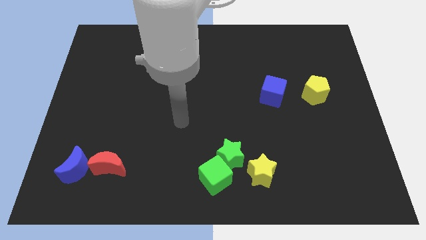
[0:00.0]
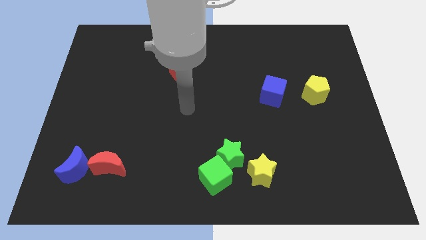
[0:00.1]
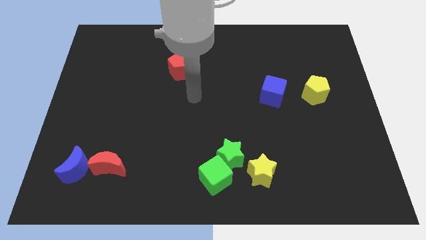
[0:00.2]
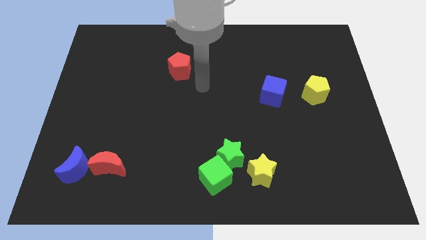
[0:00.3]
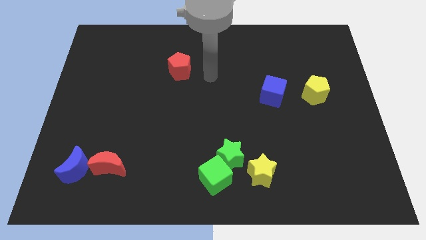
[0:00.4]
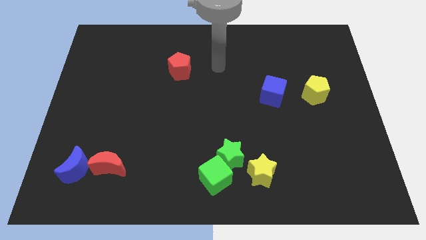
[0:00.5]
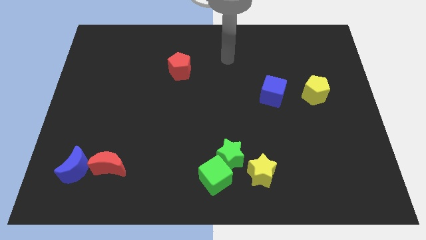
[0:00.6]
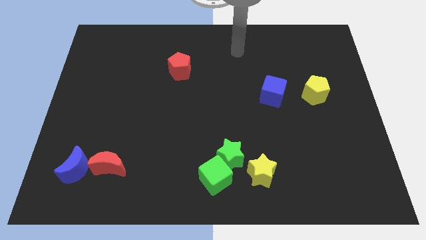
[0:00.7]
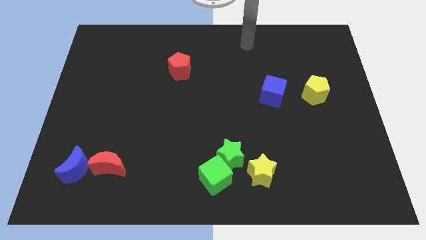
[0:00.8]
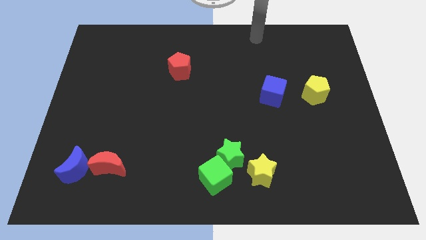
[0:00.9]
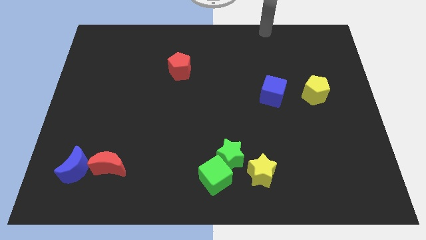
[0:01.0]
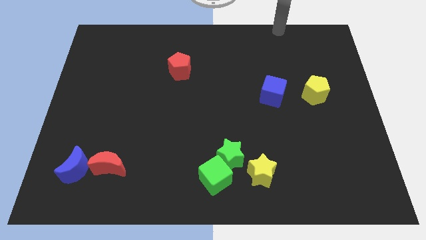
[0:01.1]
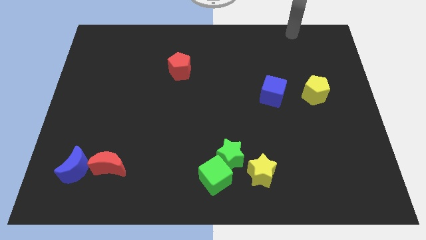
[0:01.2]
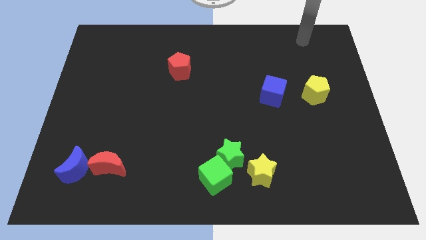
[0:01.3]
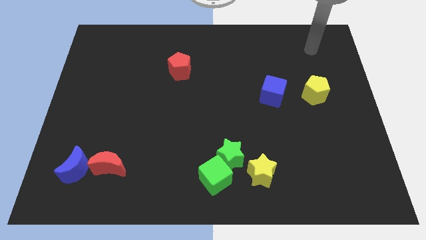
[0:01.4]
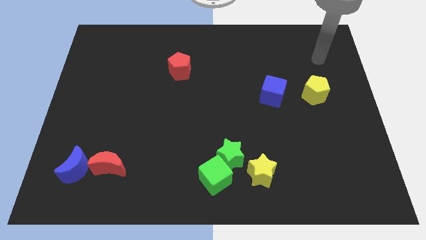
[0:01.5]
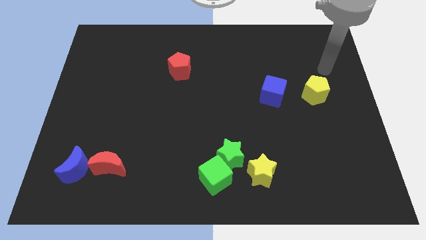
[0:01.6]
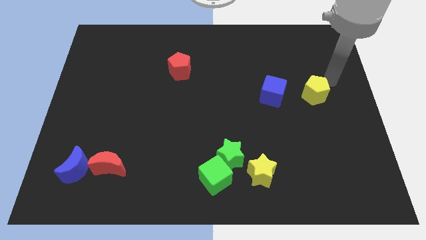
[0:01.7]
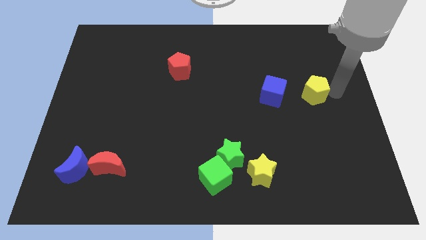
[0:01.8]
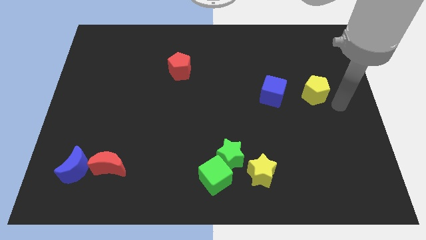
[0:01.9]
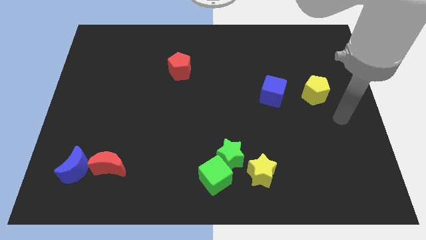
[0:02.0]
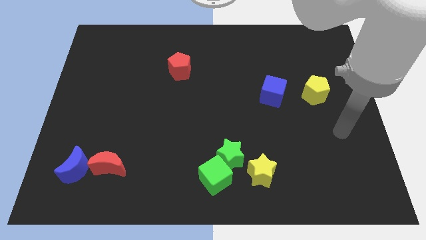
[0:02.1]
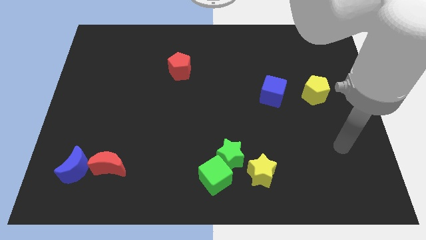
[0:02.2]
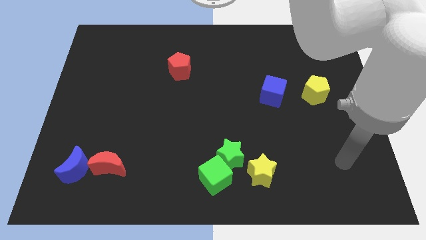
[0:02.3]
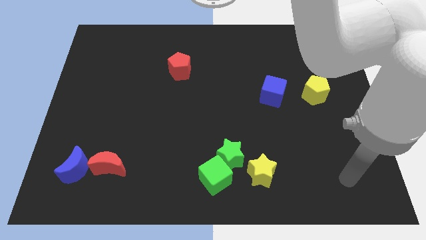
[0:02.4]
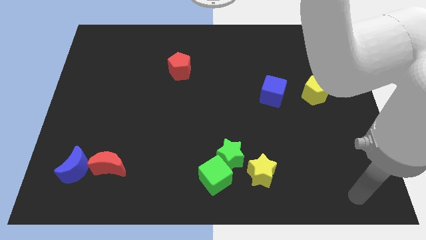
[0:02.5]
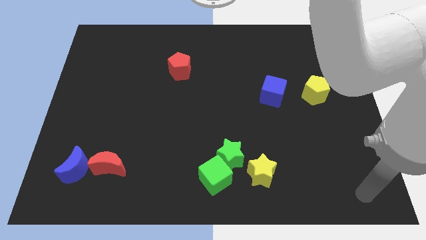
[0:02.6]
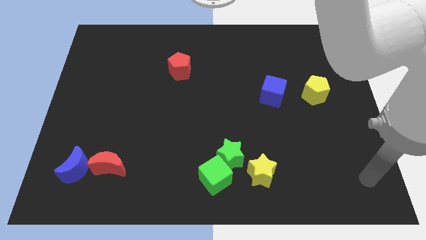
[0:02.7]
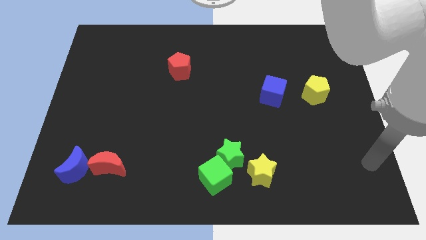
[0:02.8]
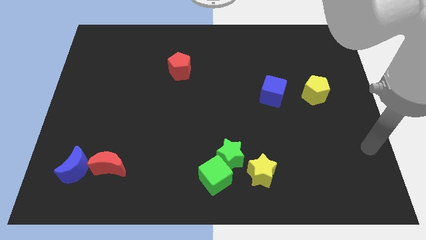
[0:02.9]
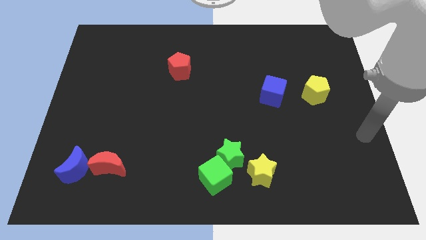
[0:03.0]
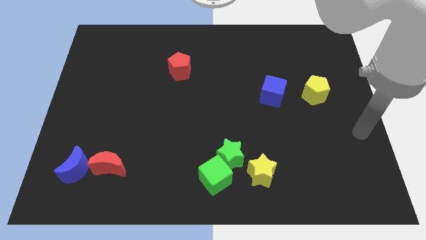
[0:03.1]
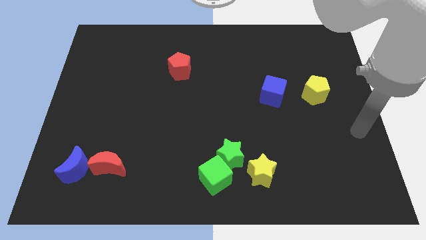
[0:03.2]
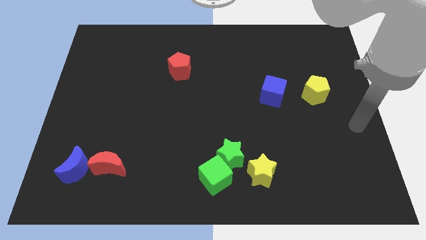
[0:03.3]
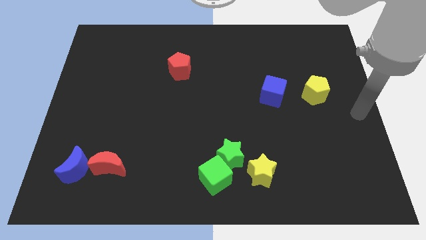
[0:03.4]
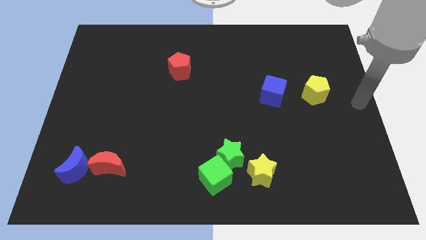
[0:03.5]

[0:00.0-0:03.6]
point your arm to the center right side of the board

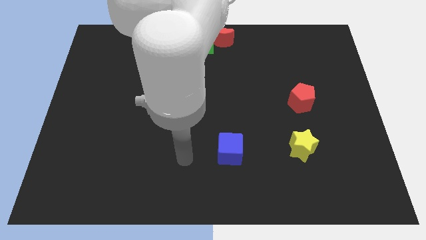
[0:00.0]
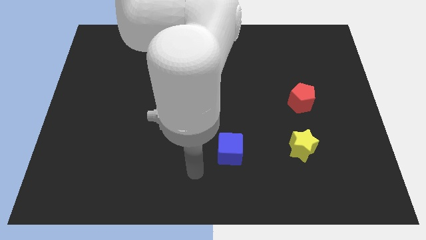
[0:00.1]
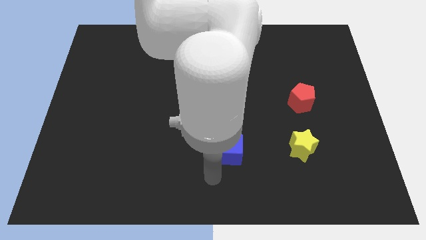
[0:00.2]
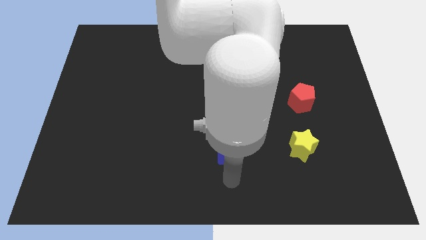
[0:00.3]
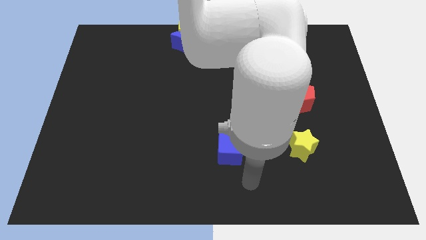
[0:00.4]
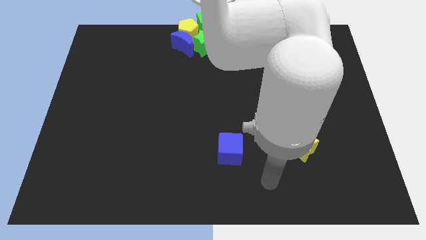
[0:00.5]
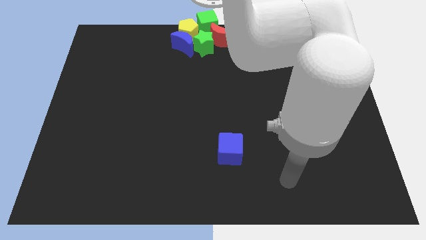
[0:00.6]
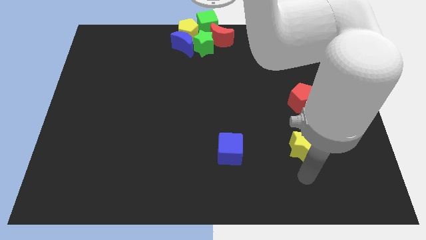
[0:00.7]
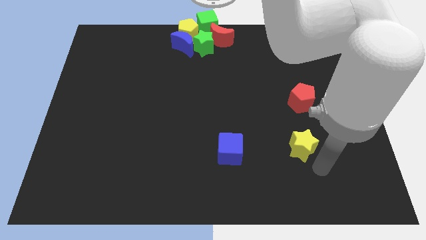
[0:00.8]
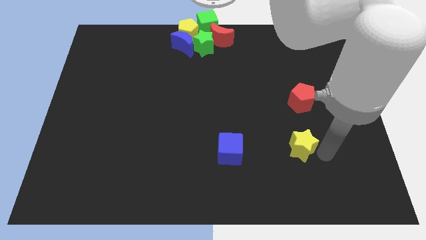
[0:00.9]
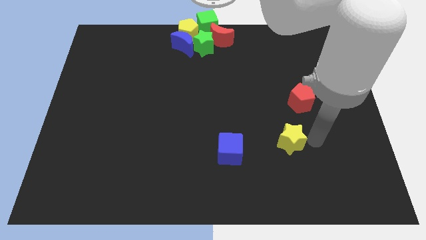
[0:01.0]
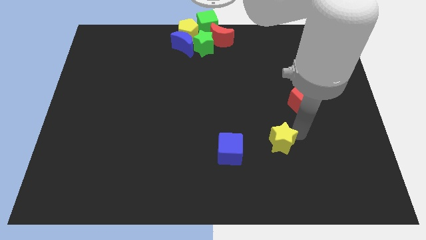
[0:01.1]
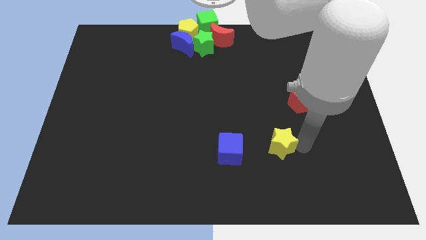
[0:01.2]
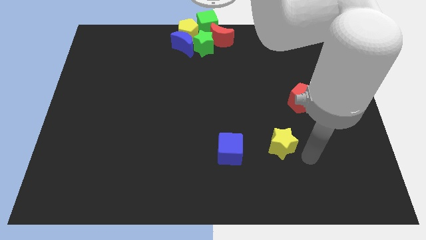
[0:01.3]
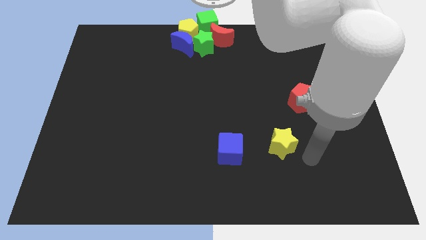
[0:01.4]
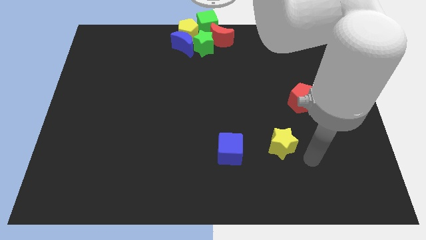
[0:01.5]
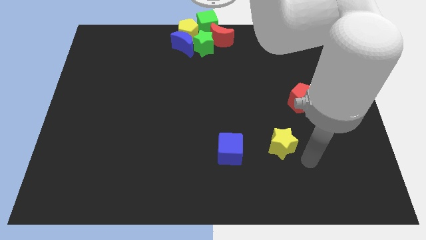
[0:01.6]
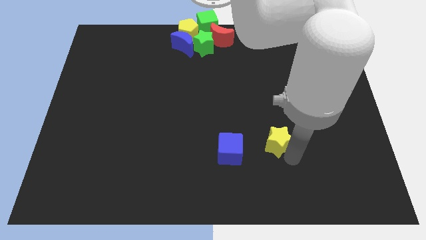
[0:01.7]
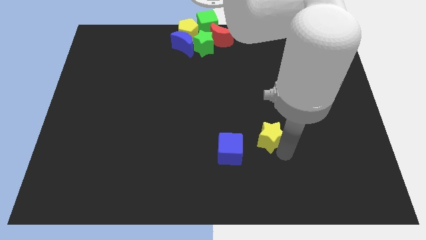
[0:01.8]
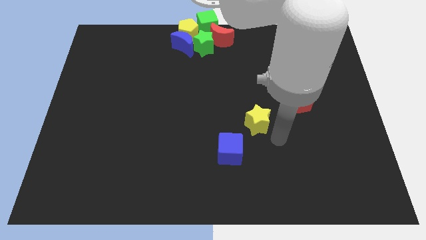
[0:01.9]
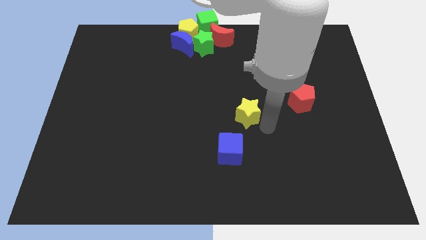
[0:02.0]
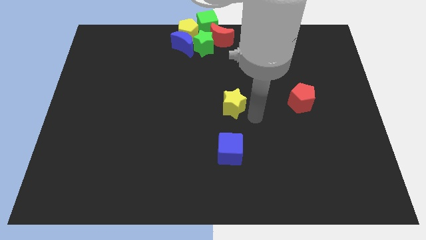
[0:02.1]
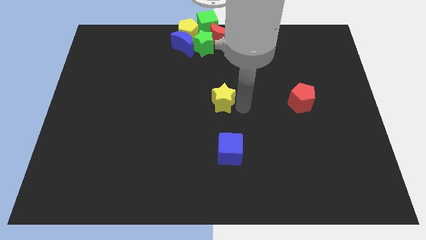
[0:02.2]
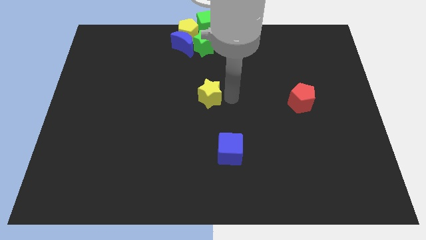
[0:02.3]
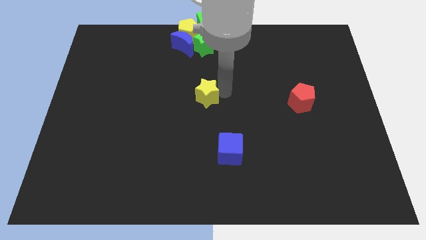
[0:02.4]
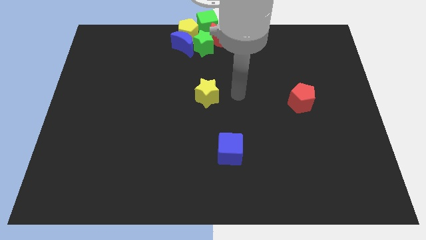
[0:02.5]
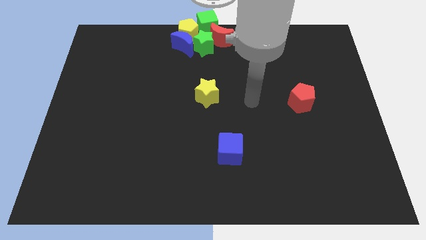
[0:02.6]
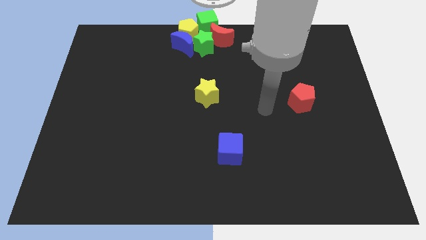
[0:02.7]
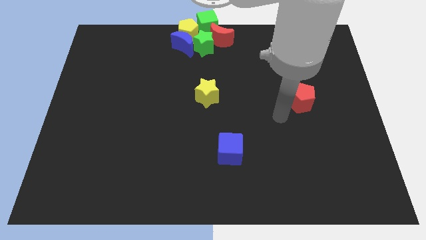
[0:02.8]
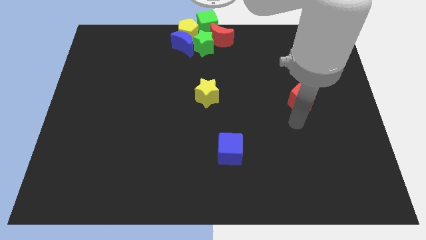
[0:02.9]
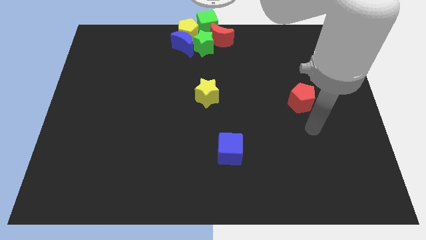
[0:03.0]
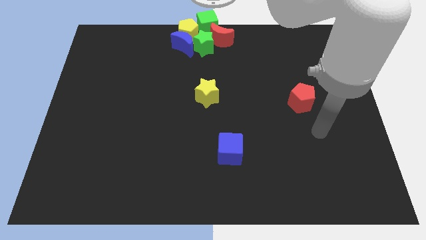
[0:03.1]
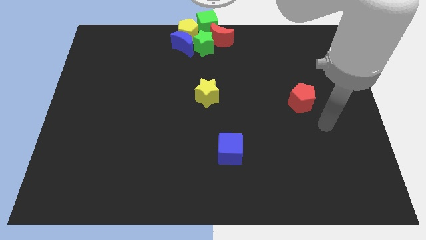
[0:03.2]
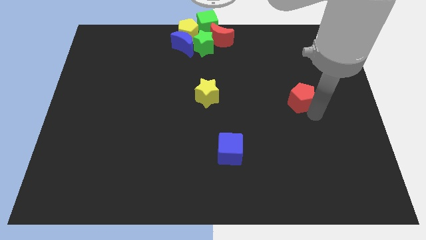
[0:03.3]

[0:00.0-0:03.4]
place the yellow star to the center of the board

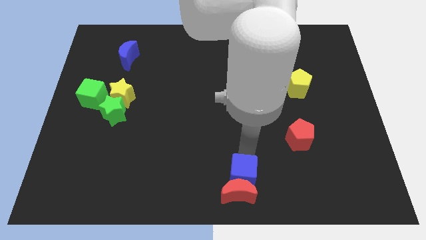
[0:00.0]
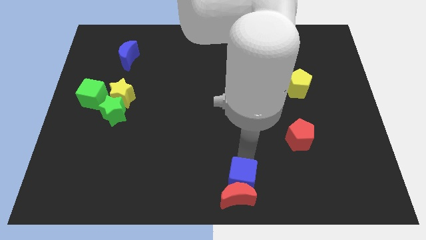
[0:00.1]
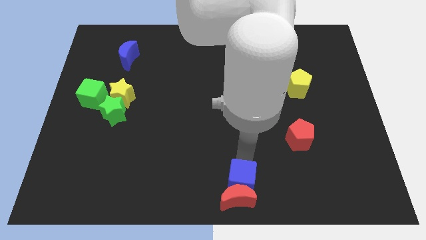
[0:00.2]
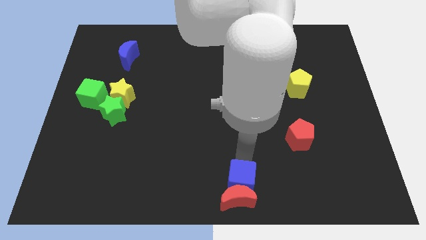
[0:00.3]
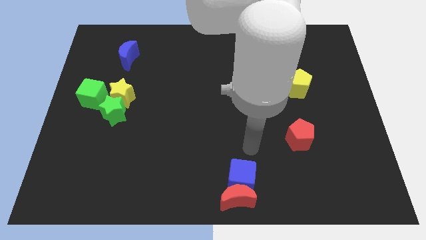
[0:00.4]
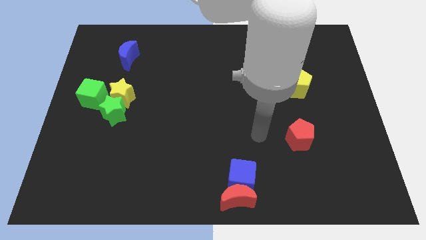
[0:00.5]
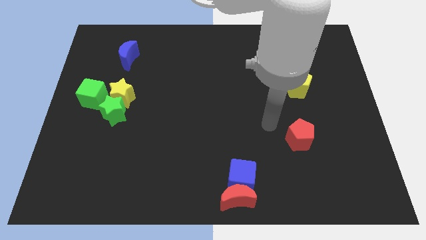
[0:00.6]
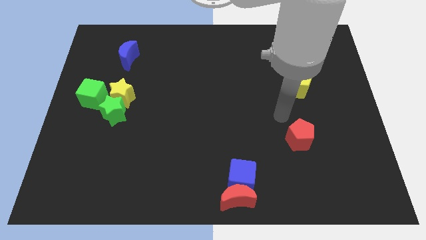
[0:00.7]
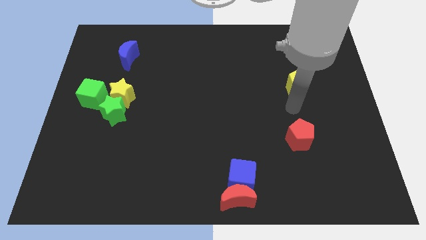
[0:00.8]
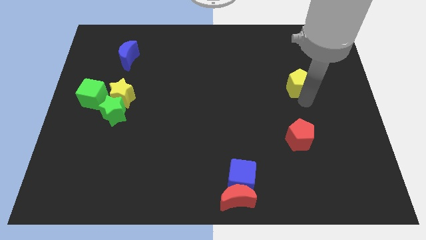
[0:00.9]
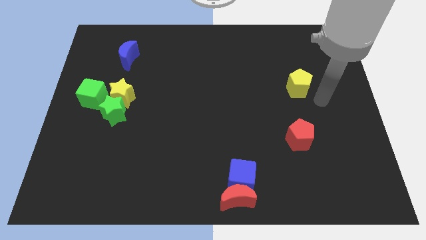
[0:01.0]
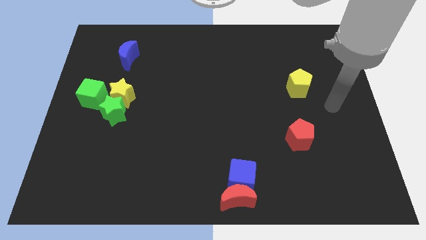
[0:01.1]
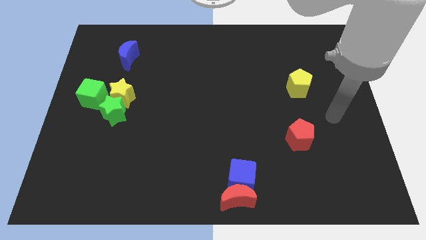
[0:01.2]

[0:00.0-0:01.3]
push the red moon with the blue cube to the bottom center of the board

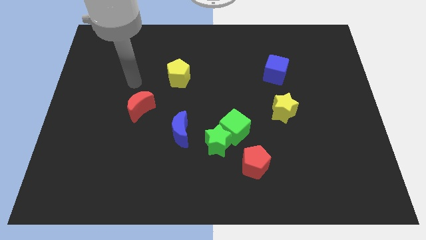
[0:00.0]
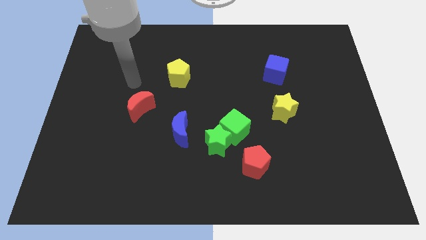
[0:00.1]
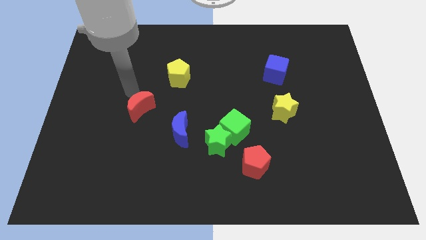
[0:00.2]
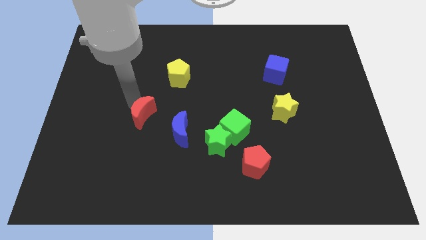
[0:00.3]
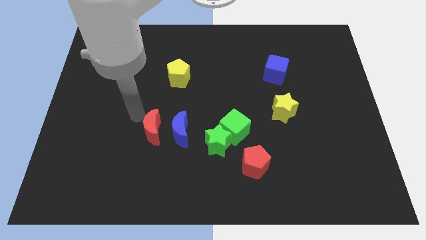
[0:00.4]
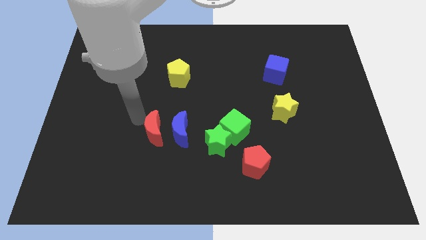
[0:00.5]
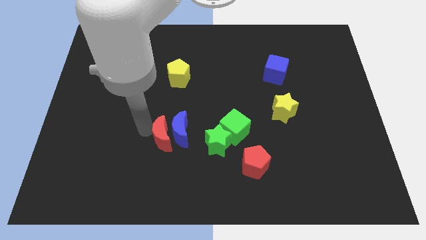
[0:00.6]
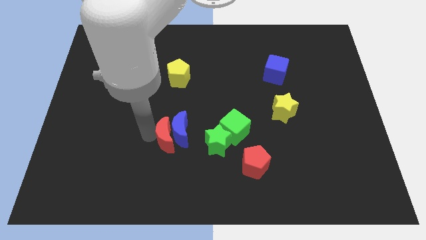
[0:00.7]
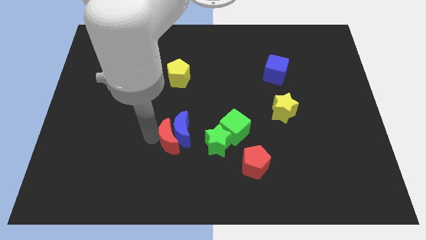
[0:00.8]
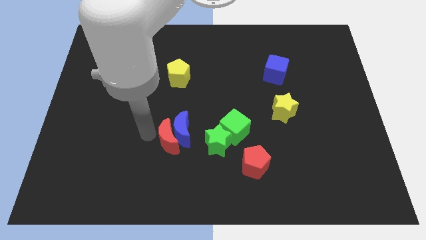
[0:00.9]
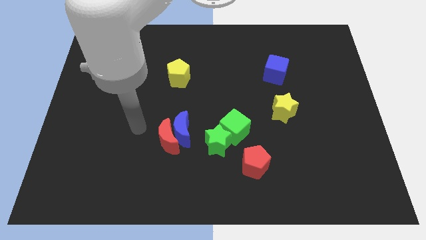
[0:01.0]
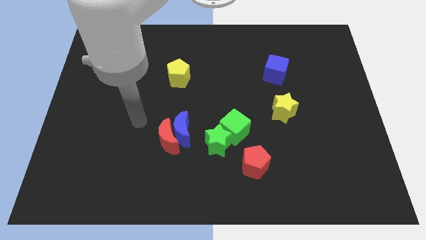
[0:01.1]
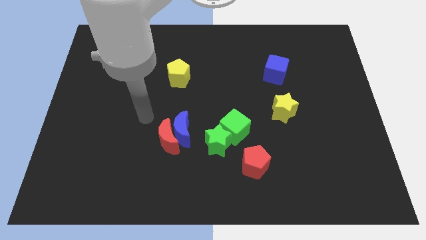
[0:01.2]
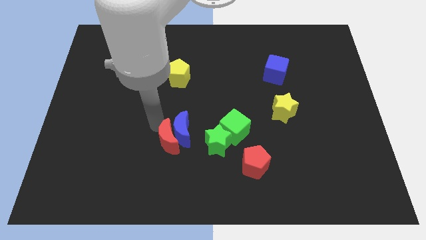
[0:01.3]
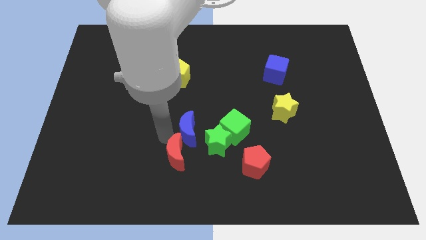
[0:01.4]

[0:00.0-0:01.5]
push the red crescent into the blue crescent
